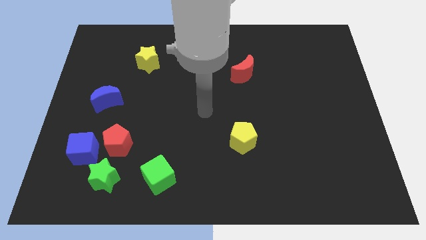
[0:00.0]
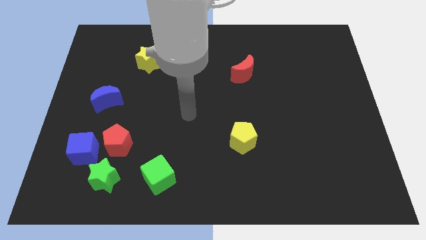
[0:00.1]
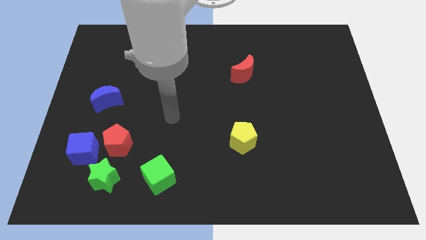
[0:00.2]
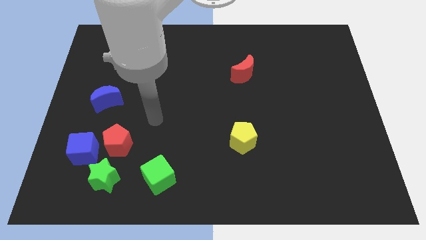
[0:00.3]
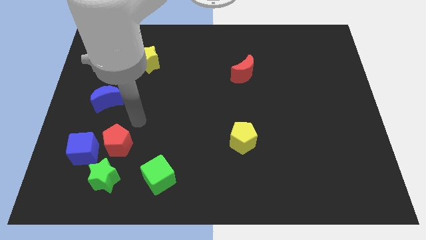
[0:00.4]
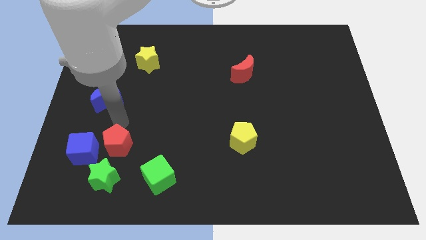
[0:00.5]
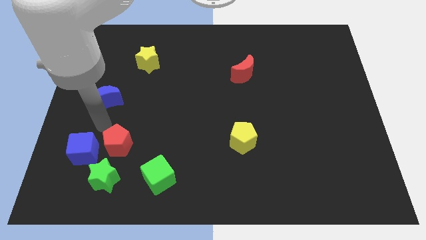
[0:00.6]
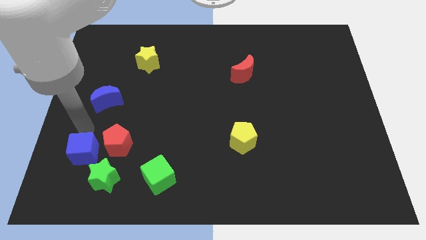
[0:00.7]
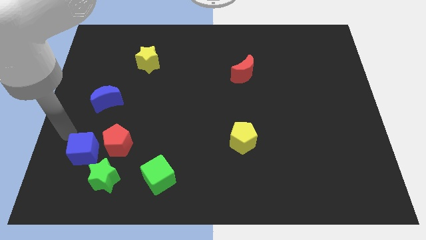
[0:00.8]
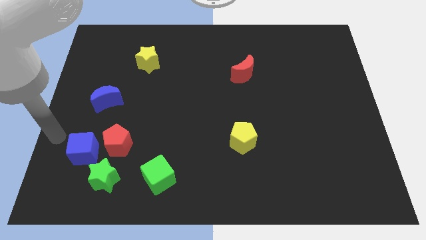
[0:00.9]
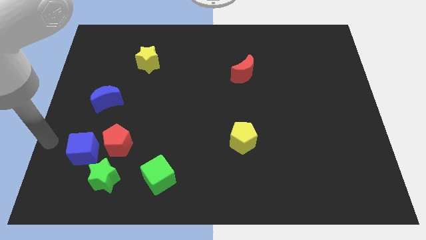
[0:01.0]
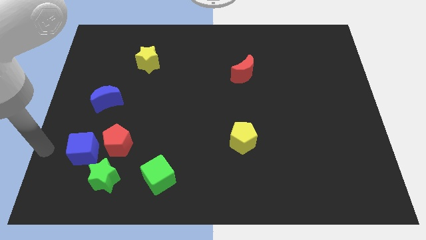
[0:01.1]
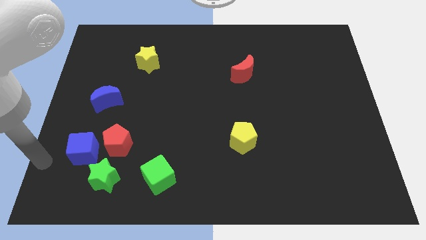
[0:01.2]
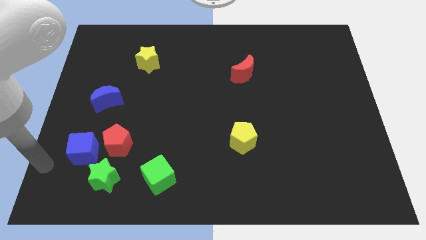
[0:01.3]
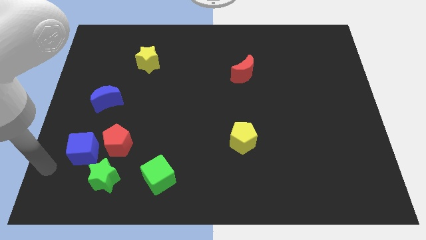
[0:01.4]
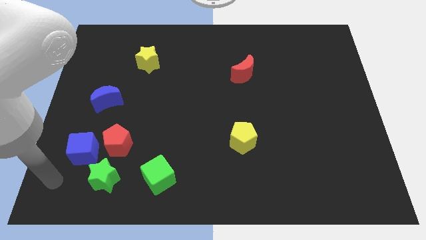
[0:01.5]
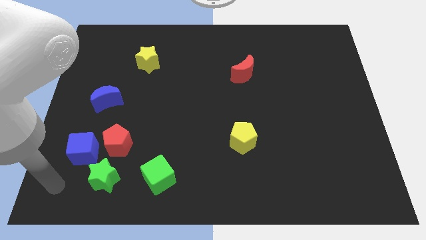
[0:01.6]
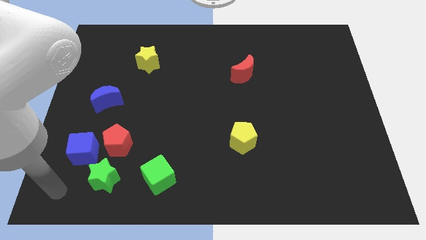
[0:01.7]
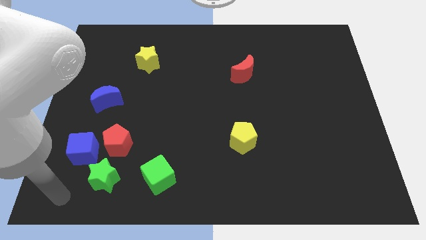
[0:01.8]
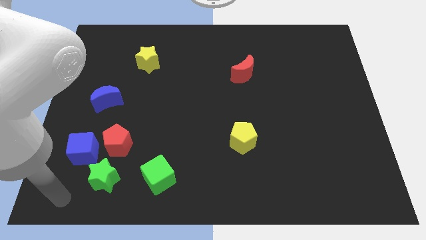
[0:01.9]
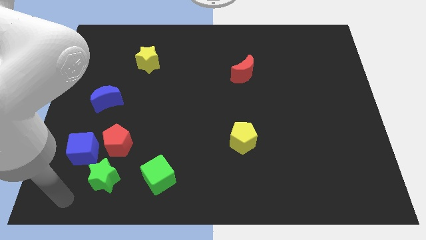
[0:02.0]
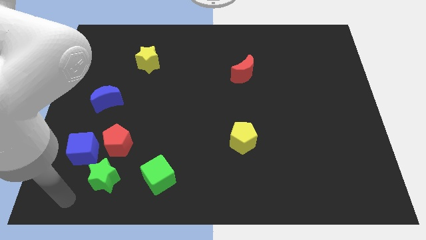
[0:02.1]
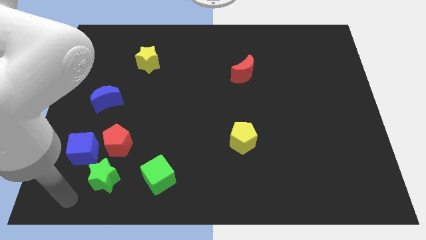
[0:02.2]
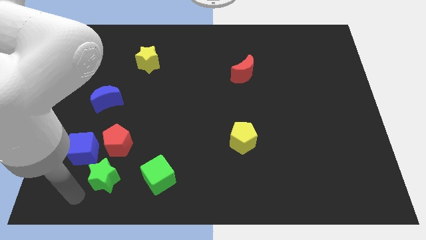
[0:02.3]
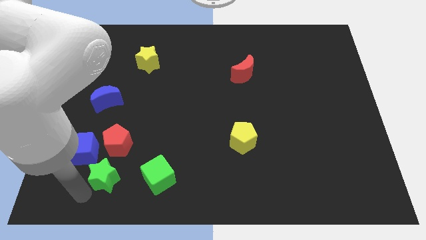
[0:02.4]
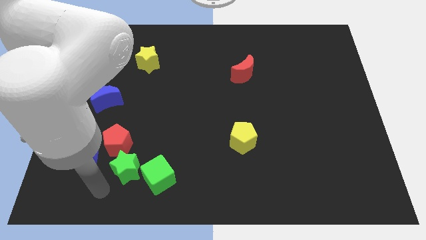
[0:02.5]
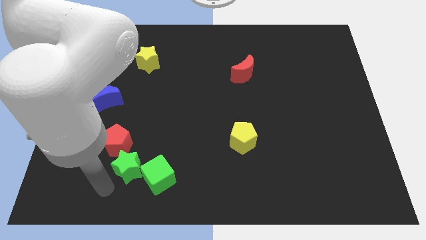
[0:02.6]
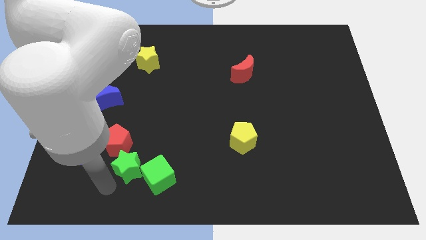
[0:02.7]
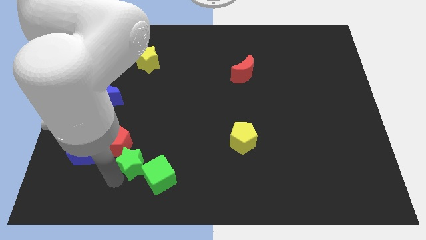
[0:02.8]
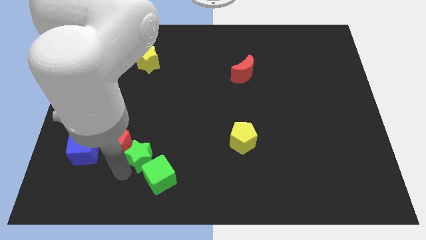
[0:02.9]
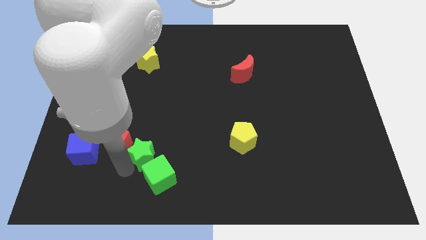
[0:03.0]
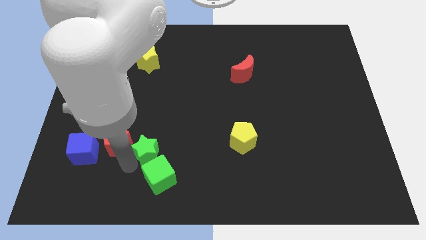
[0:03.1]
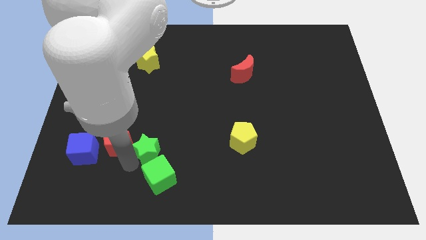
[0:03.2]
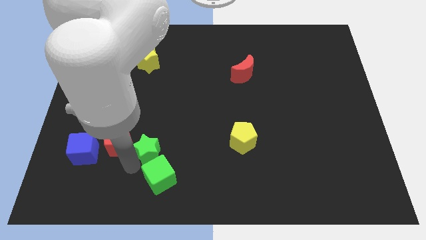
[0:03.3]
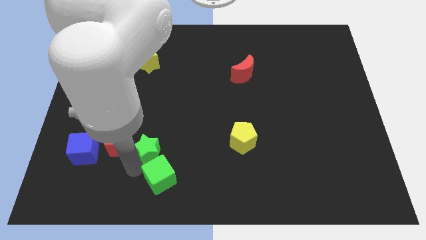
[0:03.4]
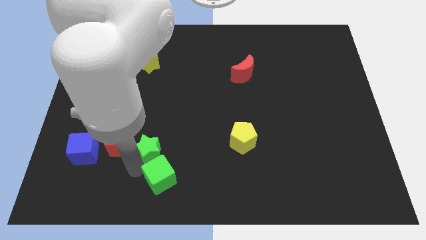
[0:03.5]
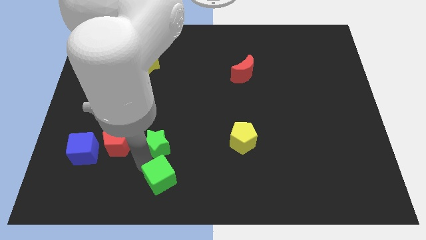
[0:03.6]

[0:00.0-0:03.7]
push the green star above the green cube

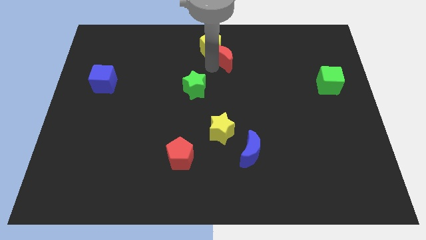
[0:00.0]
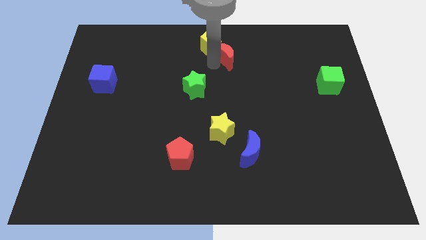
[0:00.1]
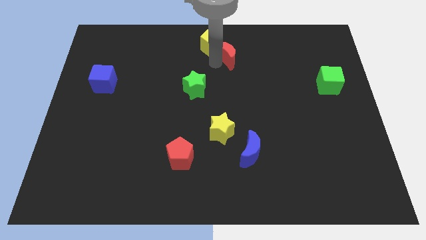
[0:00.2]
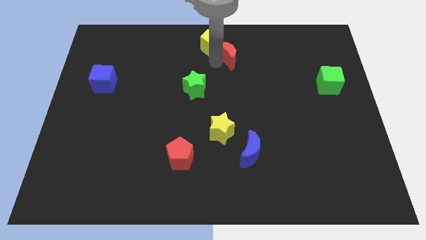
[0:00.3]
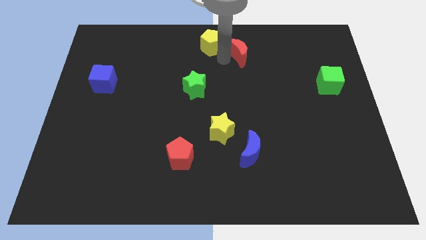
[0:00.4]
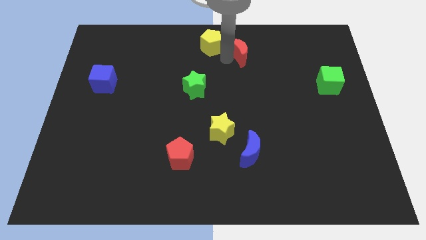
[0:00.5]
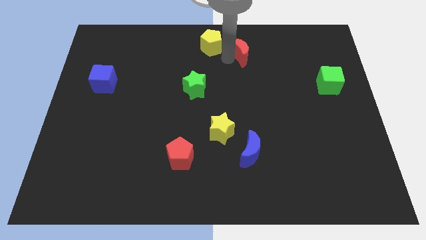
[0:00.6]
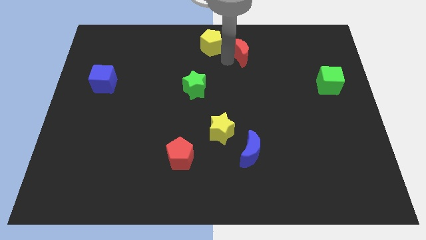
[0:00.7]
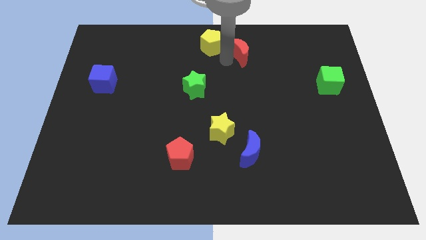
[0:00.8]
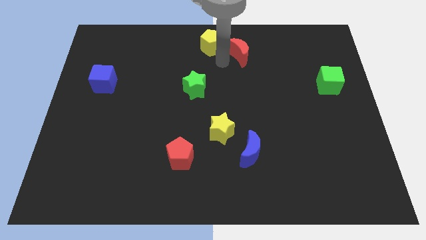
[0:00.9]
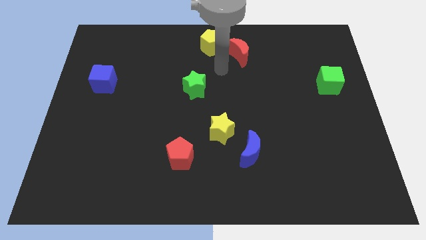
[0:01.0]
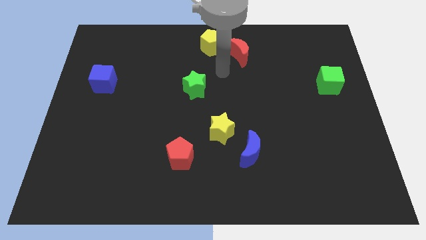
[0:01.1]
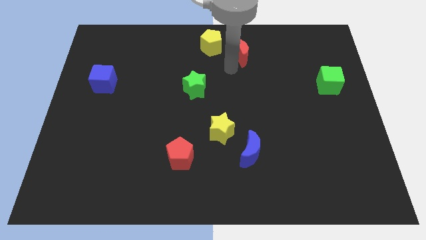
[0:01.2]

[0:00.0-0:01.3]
place red moon bottom right to the yellow pentagon

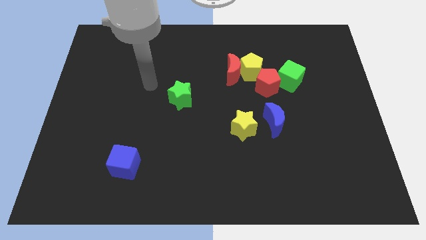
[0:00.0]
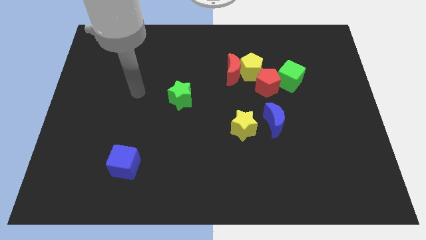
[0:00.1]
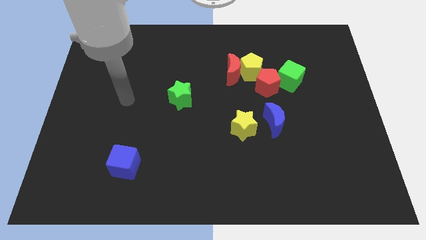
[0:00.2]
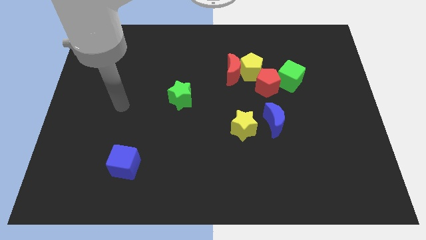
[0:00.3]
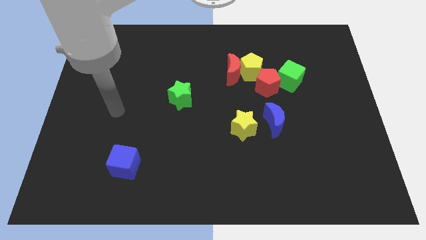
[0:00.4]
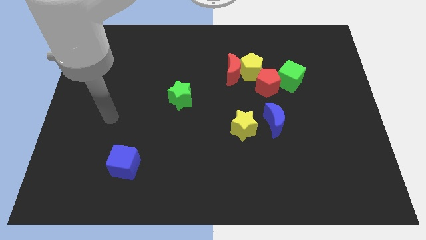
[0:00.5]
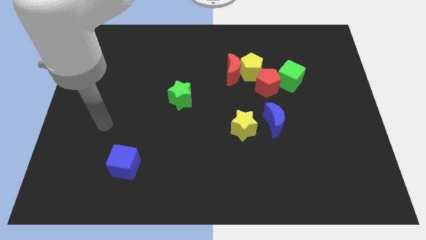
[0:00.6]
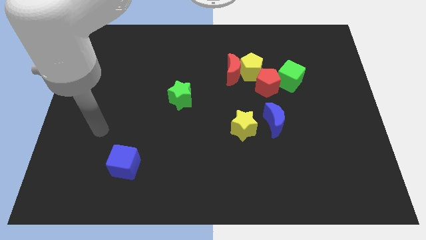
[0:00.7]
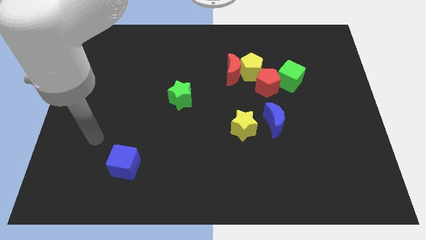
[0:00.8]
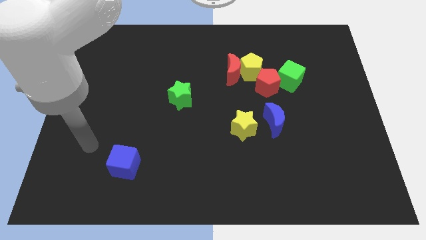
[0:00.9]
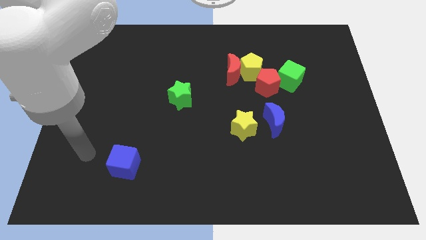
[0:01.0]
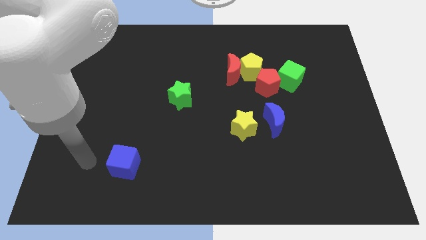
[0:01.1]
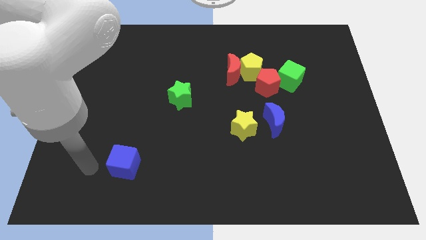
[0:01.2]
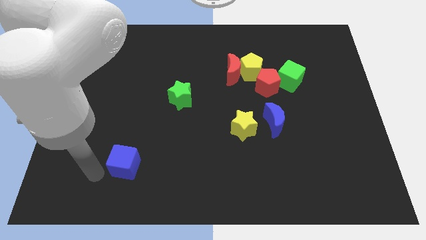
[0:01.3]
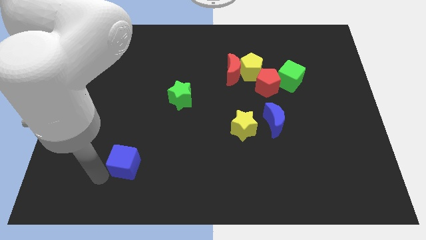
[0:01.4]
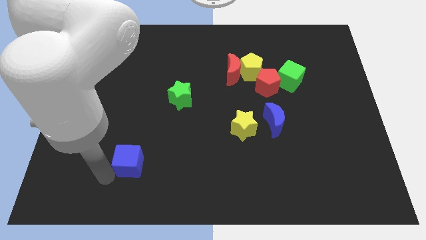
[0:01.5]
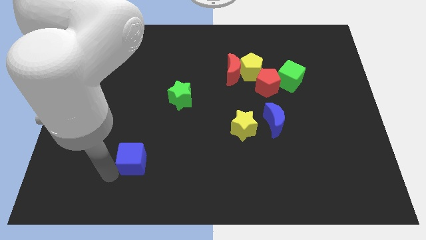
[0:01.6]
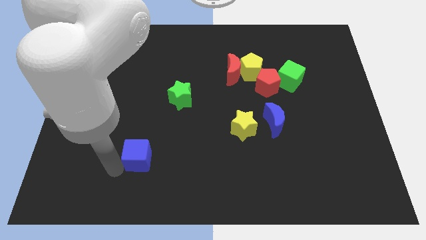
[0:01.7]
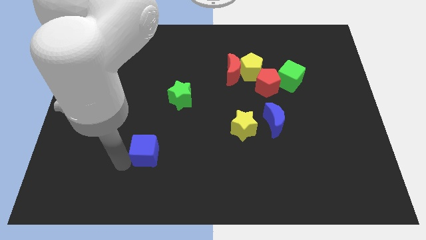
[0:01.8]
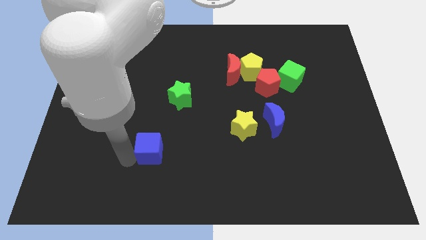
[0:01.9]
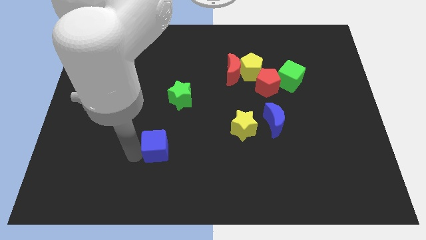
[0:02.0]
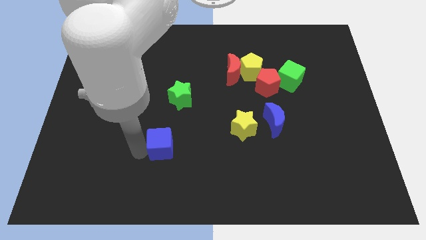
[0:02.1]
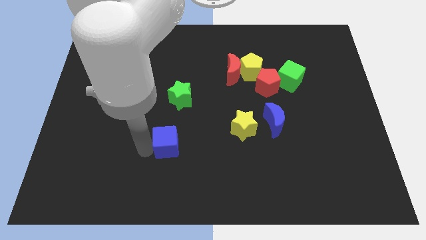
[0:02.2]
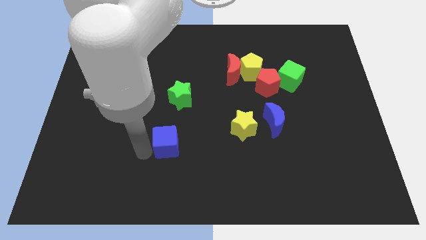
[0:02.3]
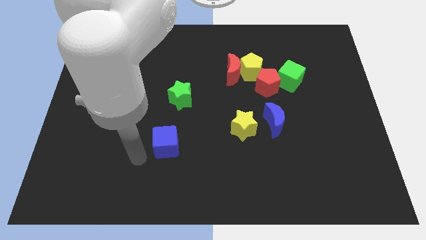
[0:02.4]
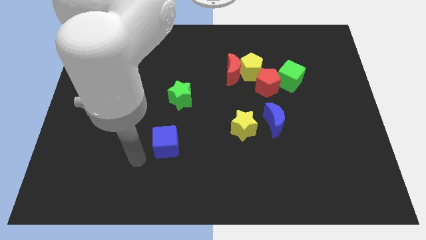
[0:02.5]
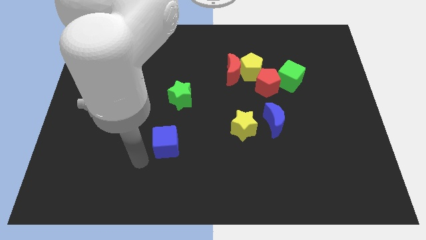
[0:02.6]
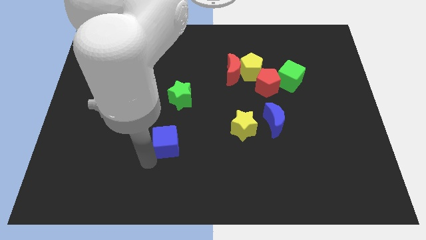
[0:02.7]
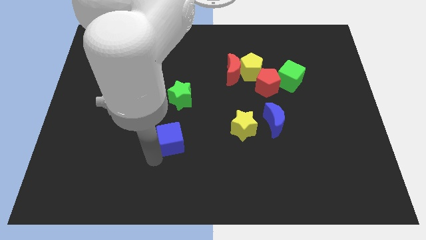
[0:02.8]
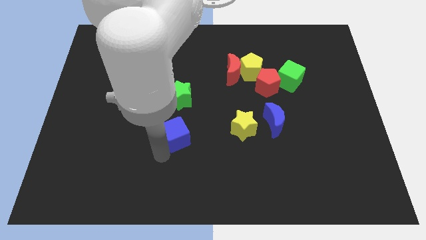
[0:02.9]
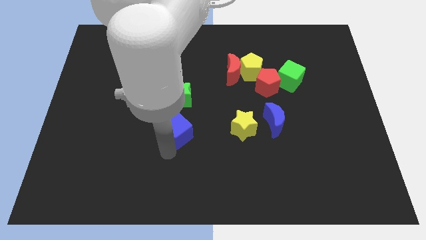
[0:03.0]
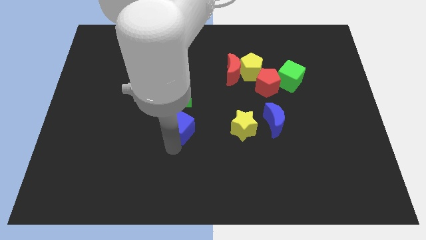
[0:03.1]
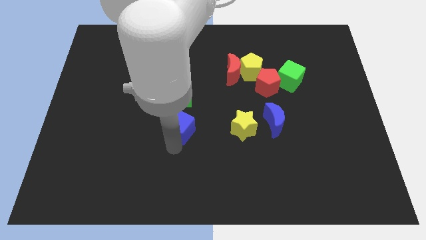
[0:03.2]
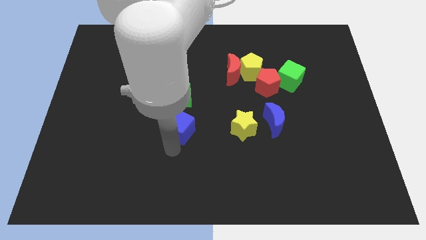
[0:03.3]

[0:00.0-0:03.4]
move the blue cube below the green star

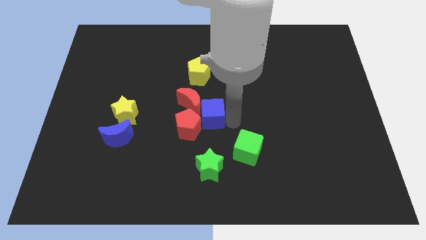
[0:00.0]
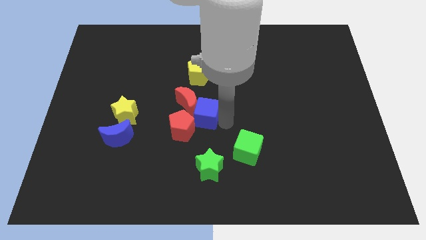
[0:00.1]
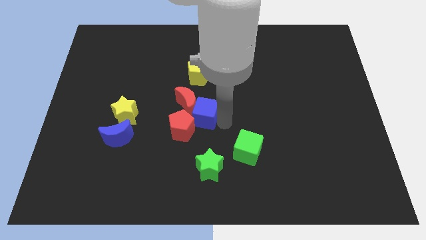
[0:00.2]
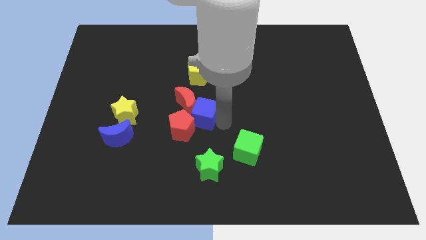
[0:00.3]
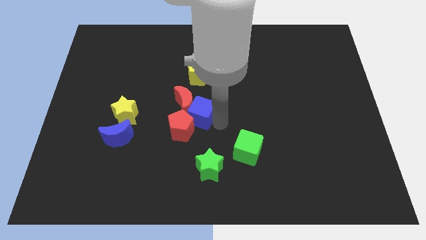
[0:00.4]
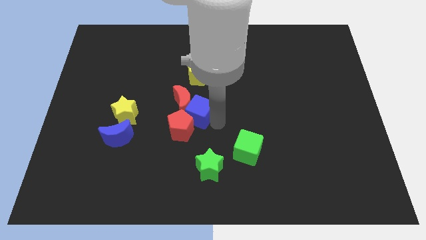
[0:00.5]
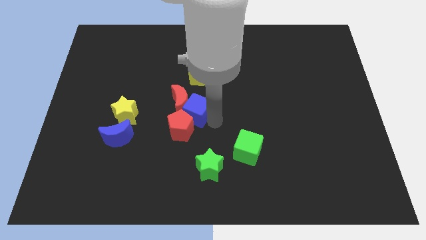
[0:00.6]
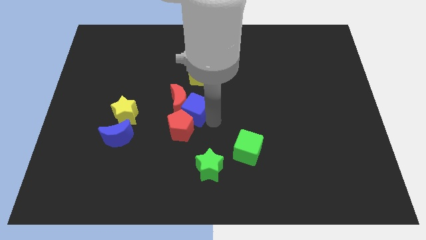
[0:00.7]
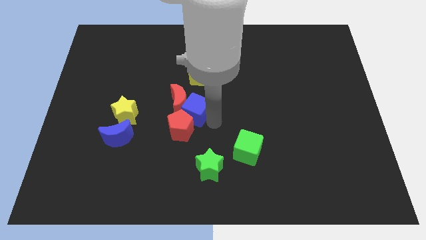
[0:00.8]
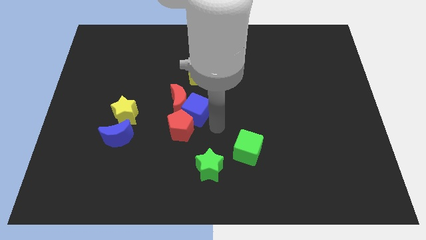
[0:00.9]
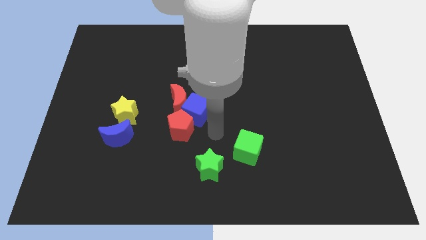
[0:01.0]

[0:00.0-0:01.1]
move the red crescent using the blue cube
